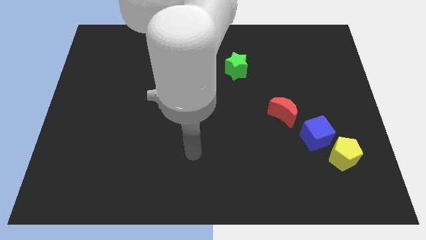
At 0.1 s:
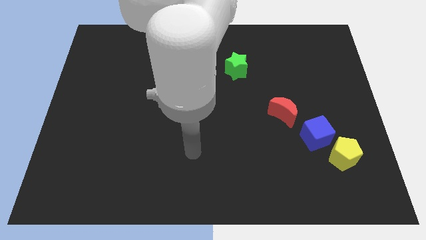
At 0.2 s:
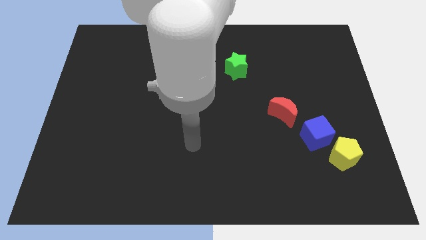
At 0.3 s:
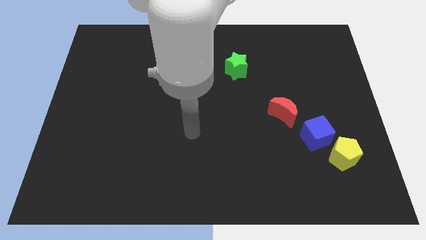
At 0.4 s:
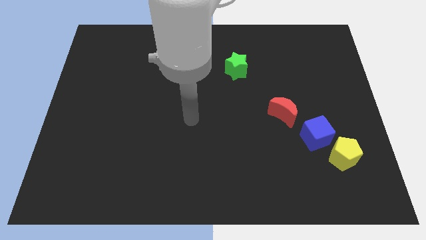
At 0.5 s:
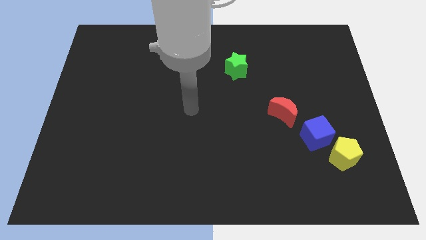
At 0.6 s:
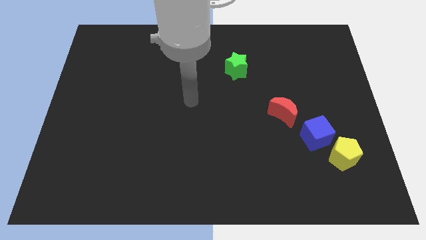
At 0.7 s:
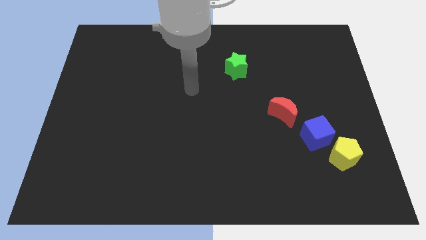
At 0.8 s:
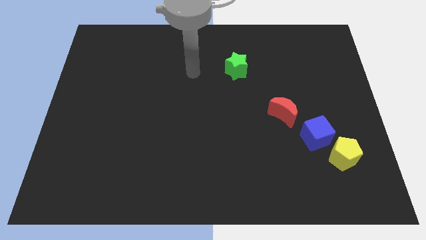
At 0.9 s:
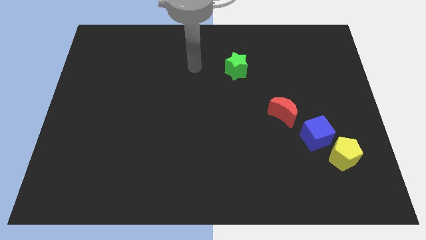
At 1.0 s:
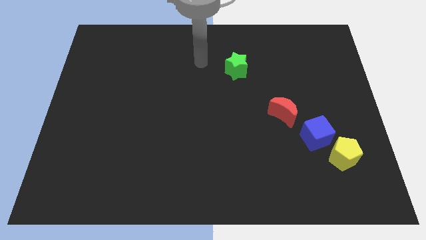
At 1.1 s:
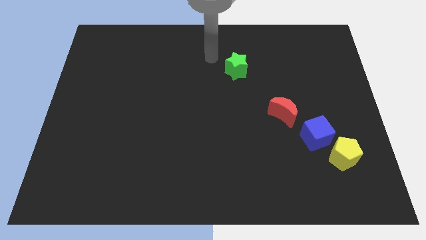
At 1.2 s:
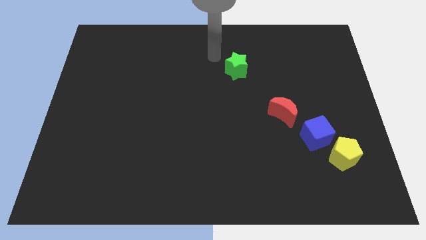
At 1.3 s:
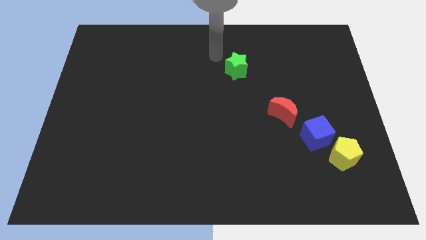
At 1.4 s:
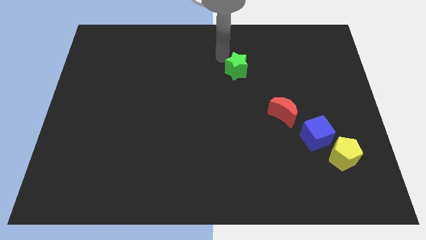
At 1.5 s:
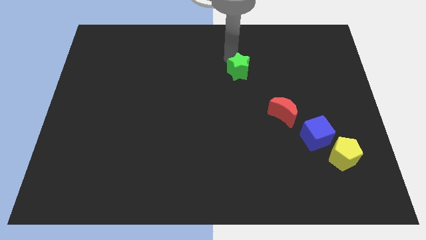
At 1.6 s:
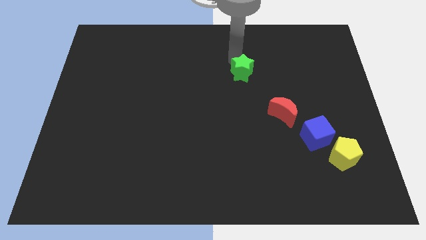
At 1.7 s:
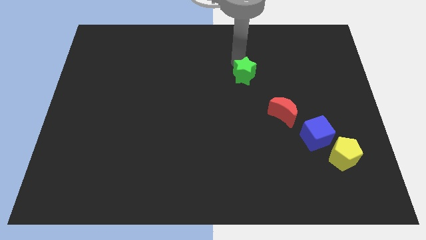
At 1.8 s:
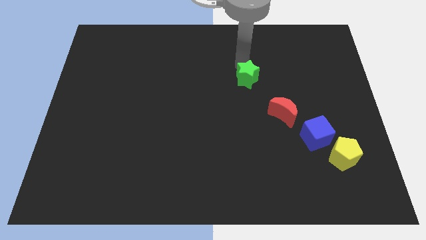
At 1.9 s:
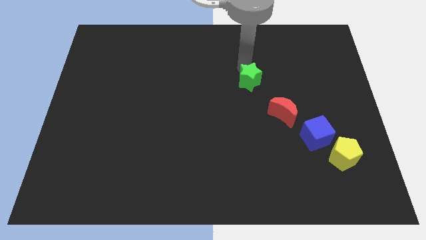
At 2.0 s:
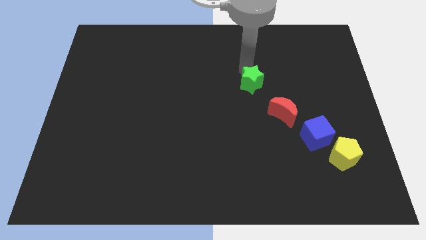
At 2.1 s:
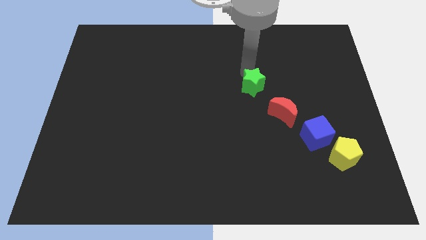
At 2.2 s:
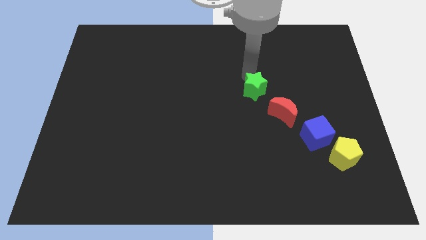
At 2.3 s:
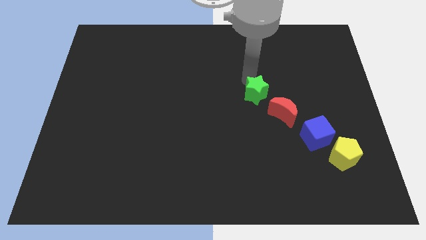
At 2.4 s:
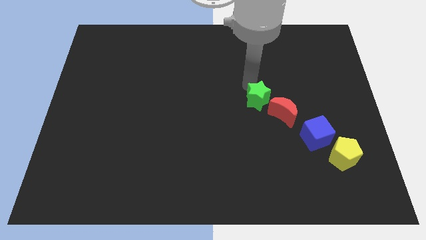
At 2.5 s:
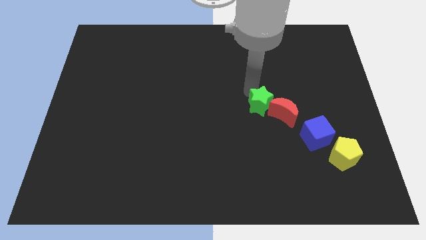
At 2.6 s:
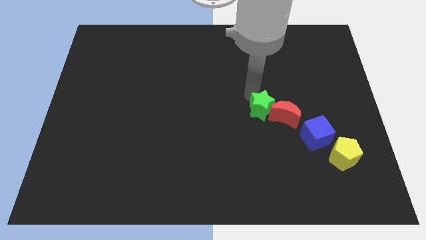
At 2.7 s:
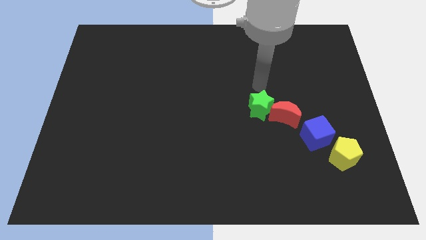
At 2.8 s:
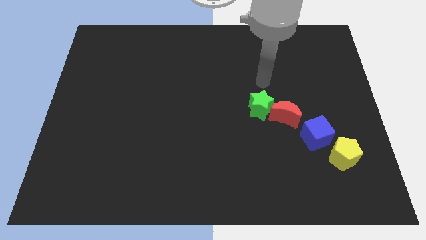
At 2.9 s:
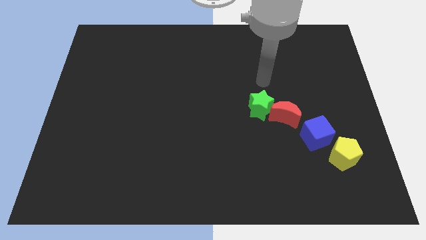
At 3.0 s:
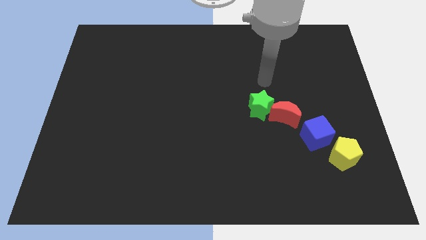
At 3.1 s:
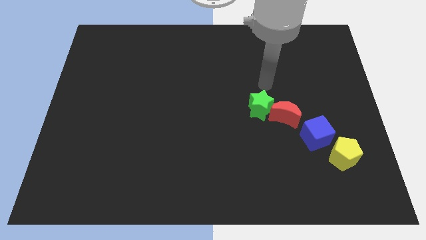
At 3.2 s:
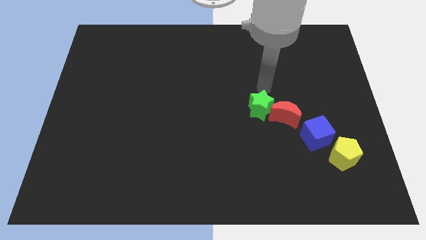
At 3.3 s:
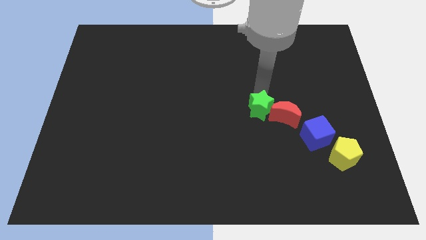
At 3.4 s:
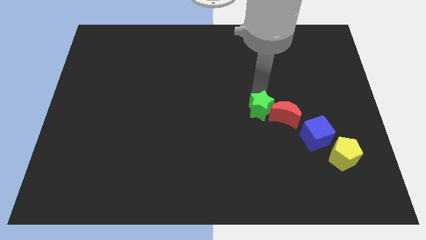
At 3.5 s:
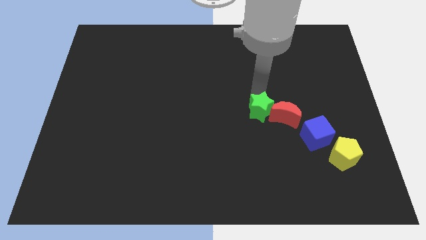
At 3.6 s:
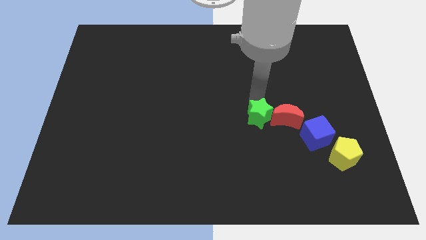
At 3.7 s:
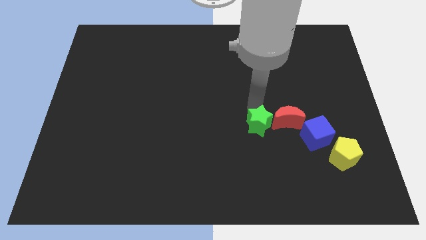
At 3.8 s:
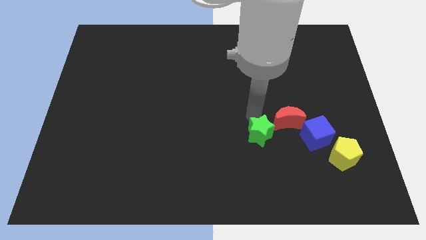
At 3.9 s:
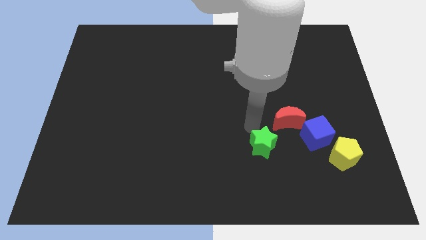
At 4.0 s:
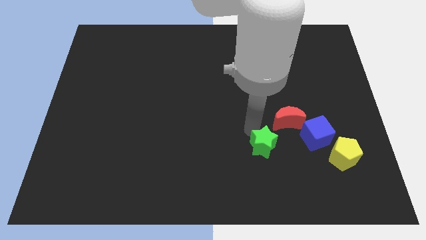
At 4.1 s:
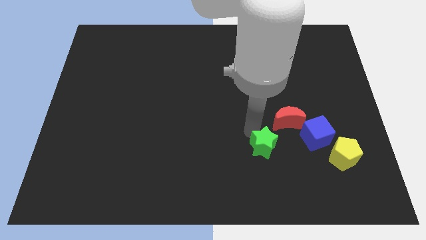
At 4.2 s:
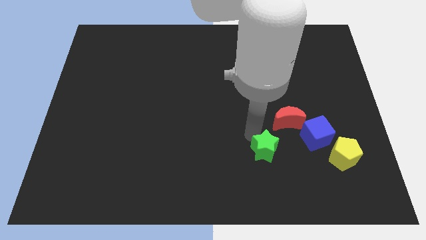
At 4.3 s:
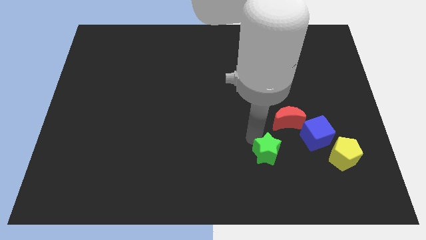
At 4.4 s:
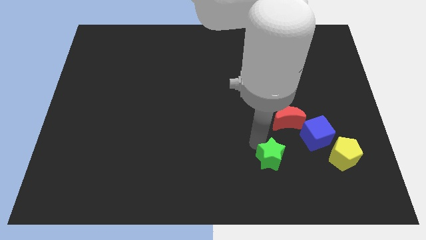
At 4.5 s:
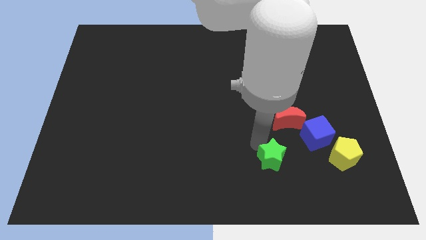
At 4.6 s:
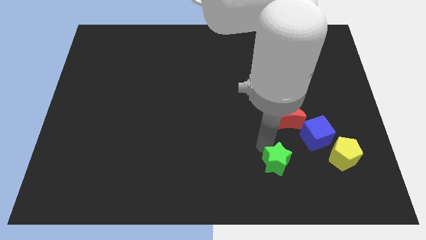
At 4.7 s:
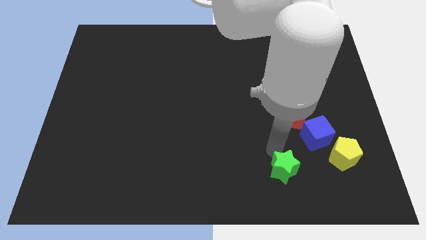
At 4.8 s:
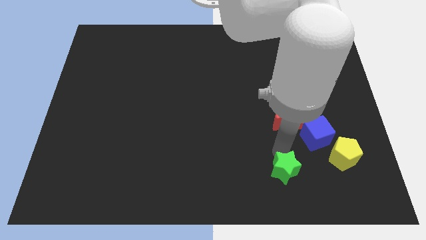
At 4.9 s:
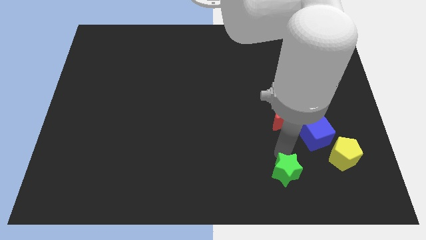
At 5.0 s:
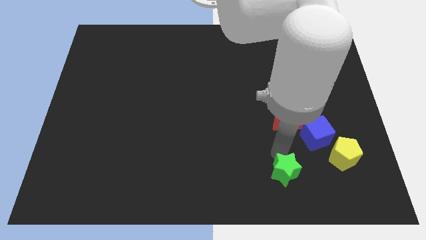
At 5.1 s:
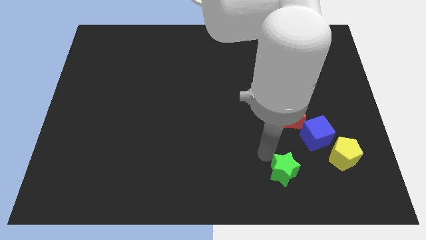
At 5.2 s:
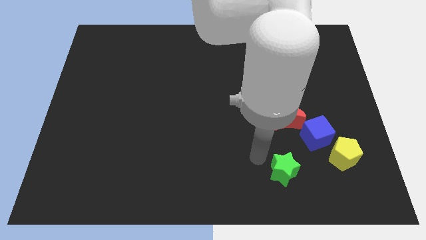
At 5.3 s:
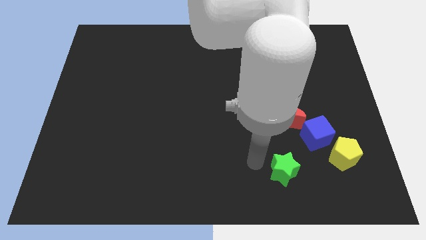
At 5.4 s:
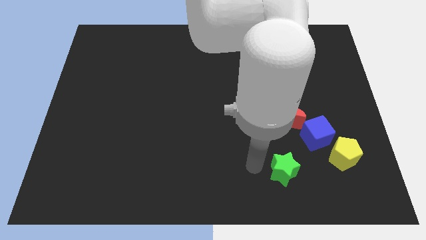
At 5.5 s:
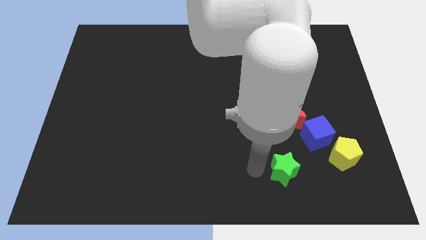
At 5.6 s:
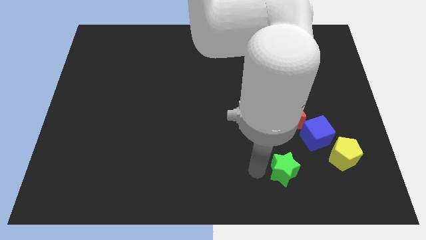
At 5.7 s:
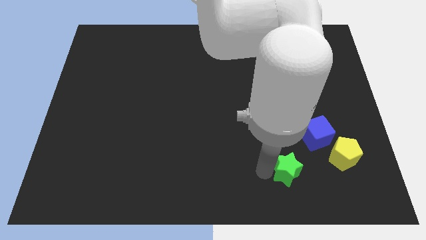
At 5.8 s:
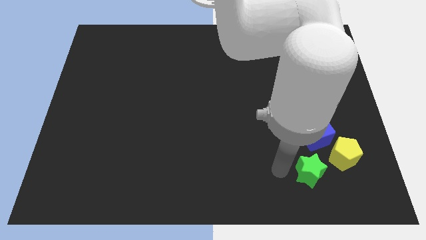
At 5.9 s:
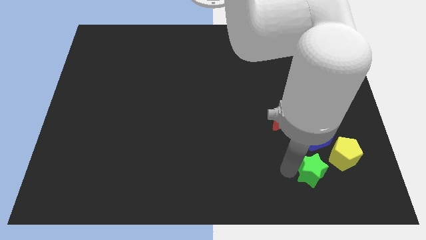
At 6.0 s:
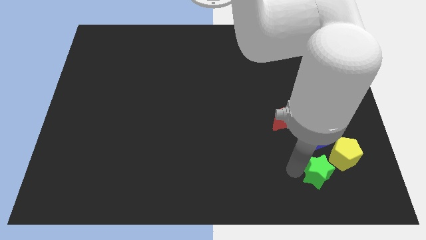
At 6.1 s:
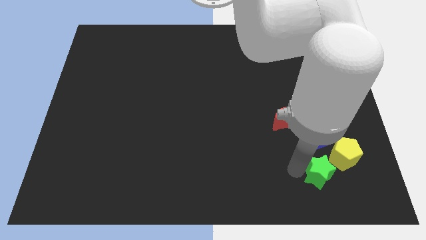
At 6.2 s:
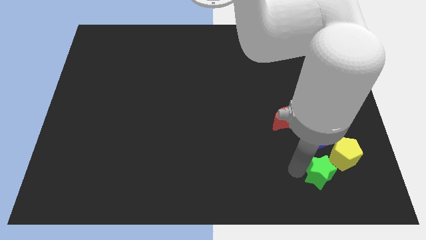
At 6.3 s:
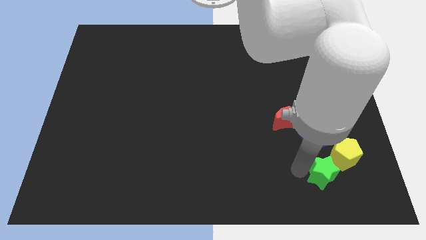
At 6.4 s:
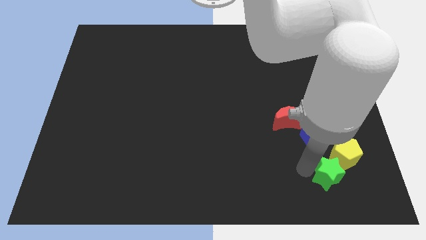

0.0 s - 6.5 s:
put the green star to the yellow pentagon

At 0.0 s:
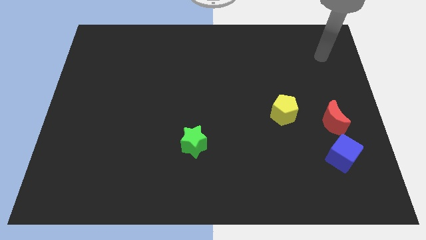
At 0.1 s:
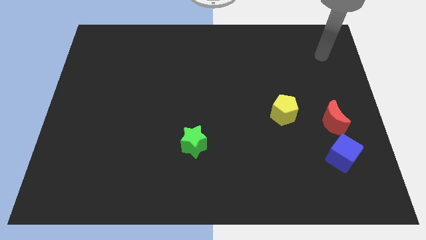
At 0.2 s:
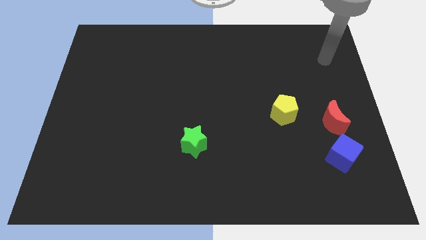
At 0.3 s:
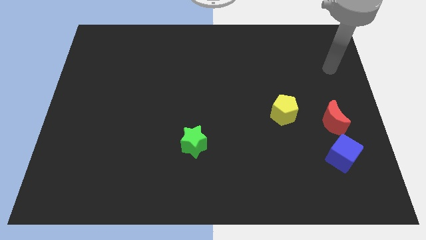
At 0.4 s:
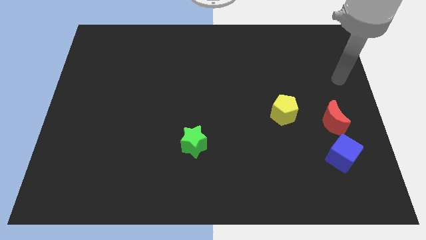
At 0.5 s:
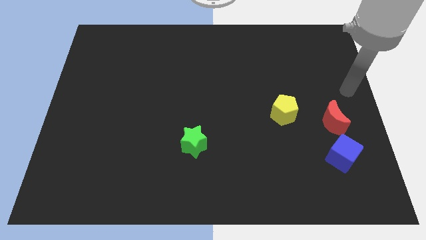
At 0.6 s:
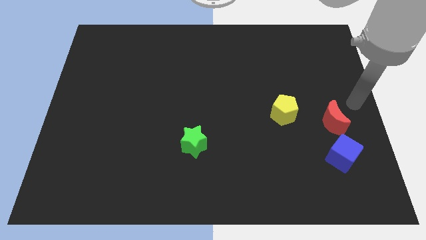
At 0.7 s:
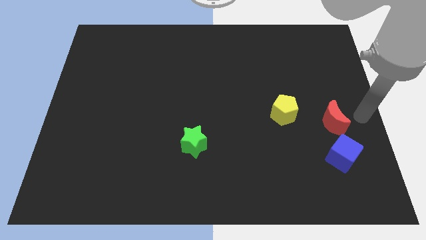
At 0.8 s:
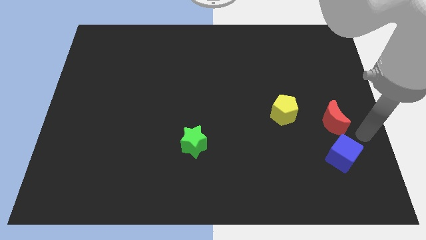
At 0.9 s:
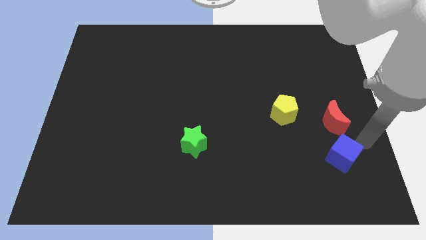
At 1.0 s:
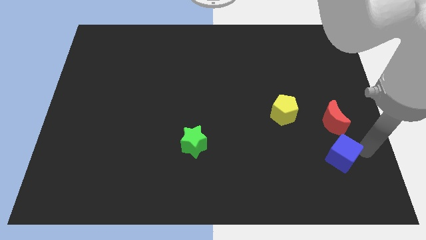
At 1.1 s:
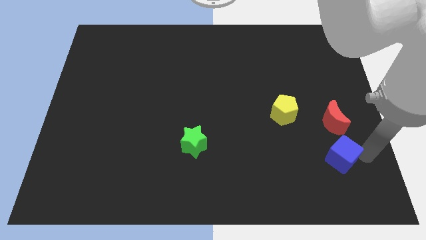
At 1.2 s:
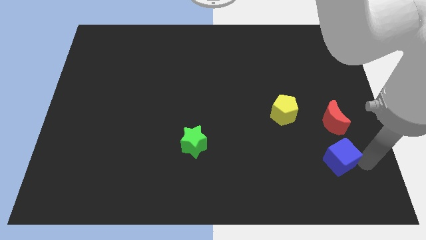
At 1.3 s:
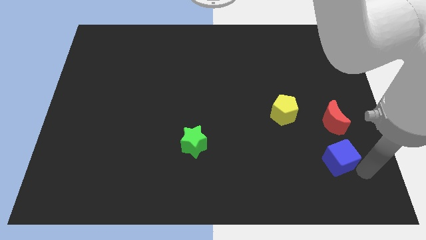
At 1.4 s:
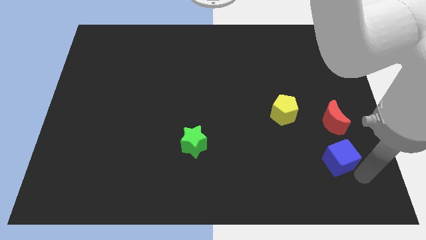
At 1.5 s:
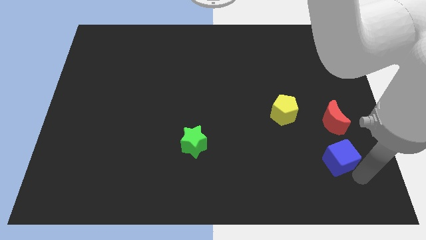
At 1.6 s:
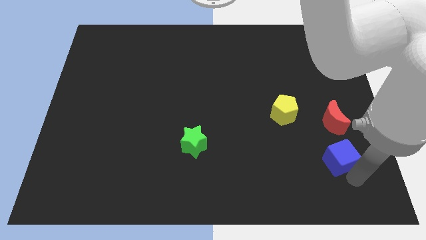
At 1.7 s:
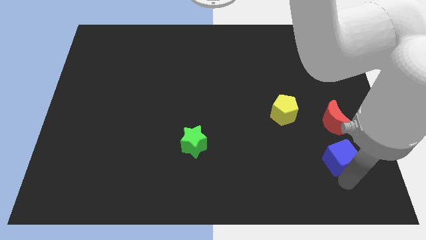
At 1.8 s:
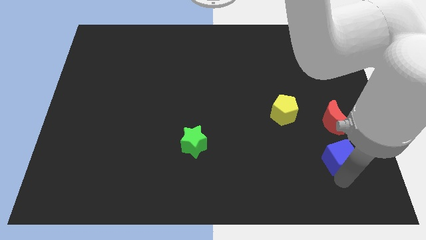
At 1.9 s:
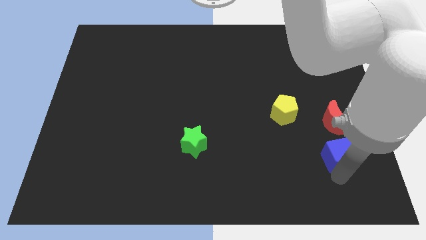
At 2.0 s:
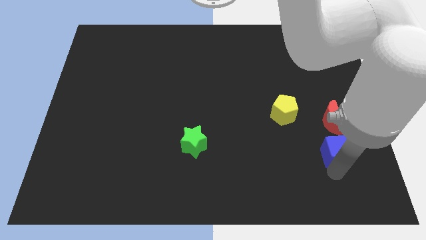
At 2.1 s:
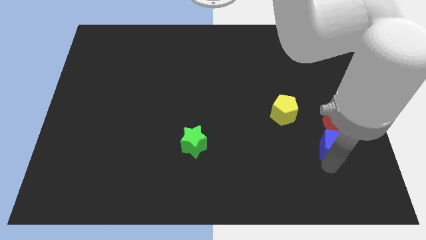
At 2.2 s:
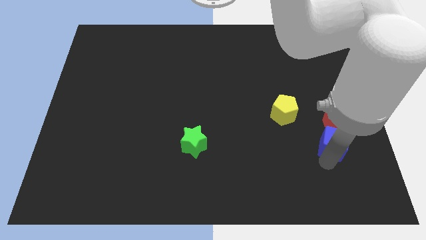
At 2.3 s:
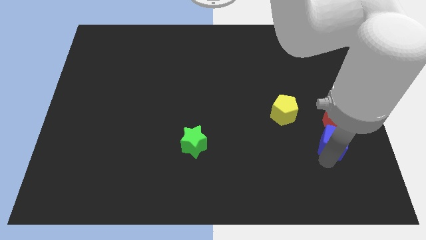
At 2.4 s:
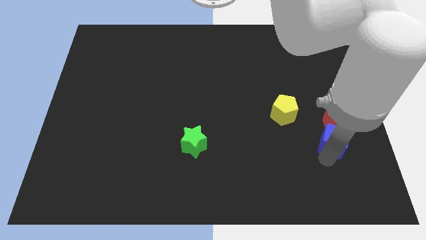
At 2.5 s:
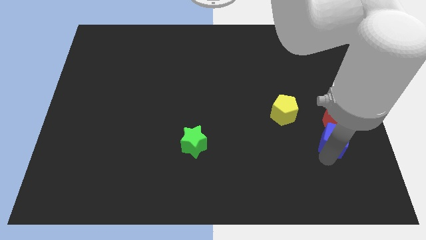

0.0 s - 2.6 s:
put the blue block towards the red block
